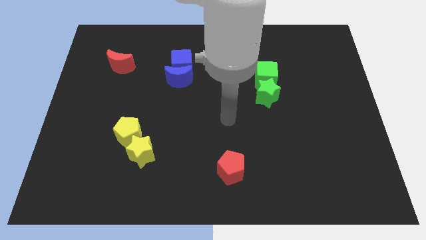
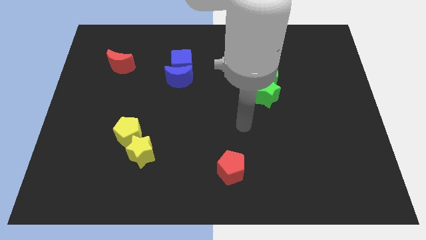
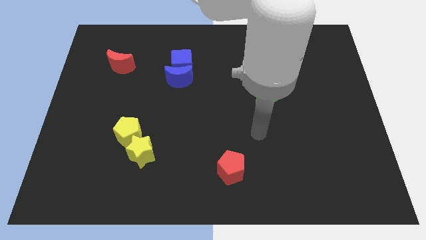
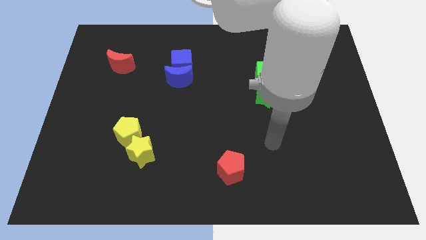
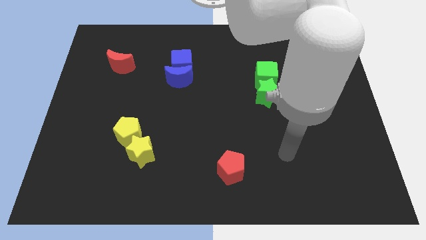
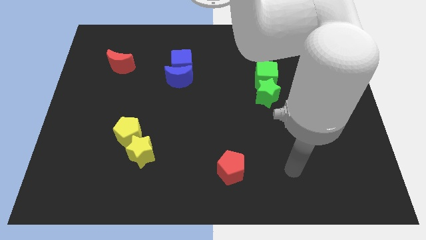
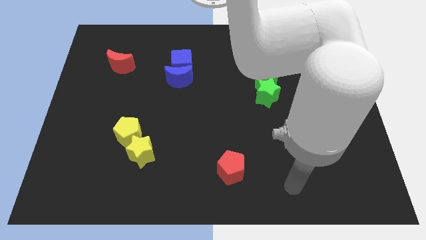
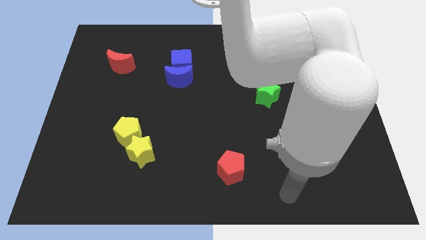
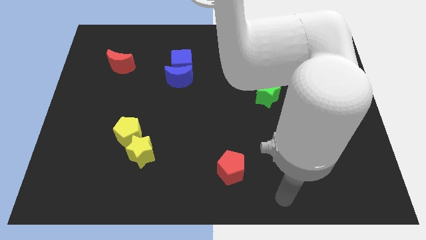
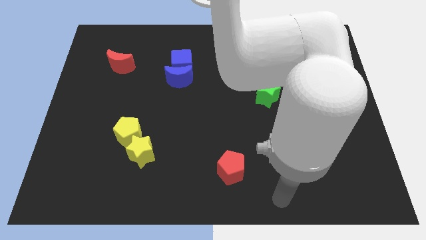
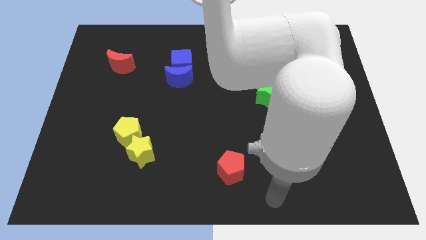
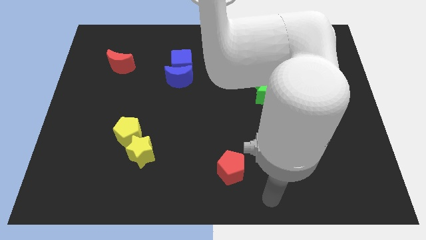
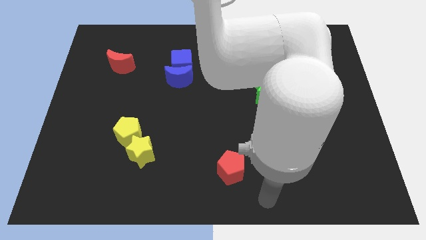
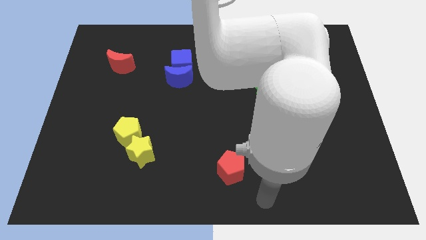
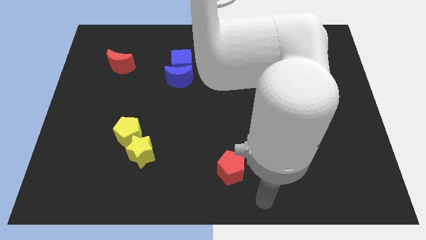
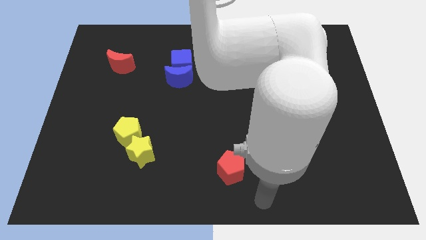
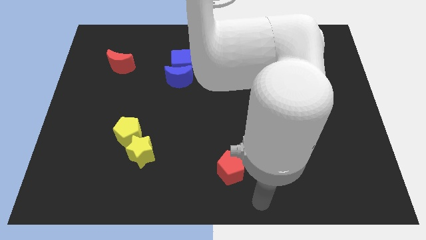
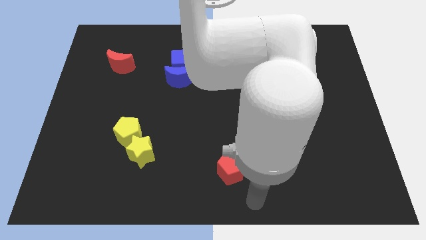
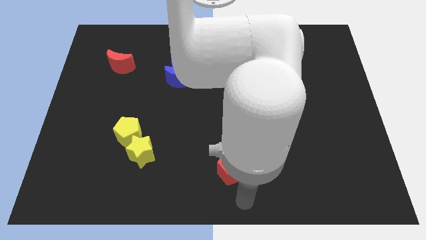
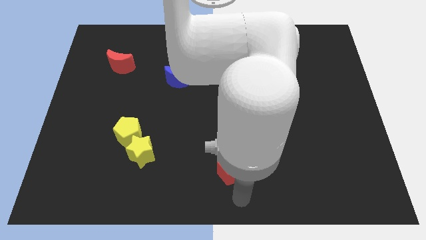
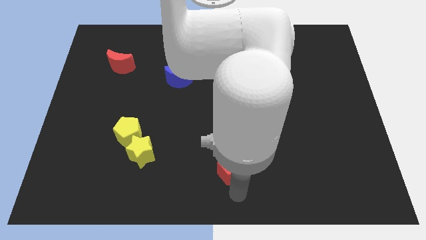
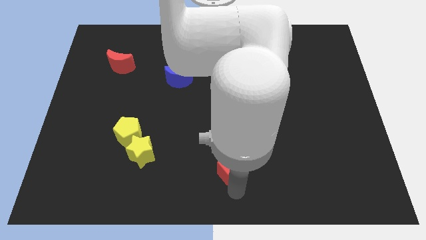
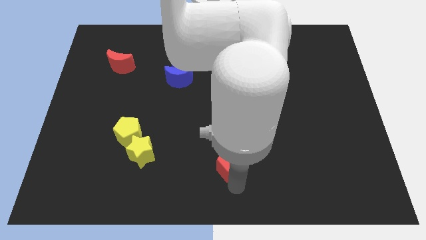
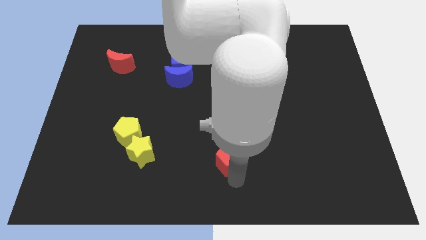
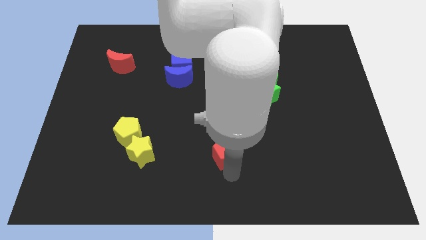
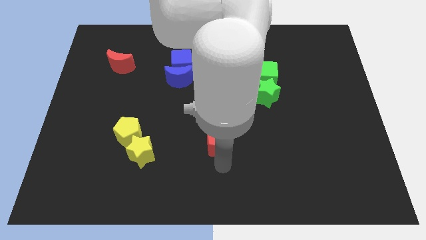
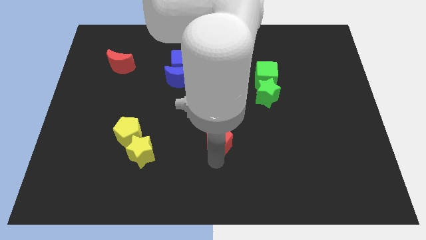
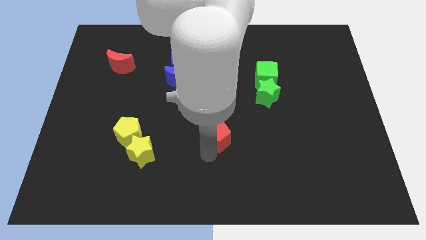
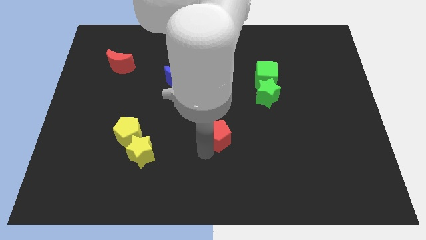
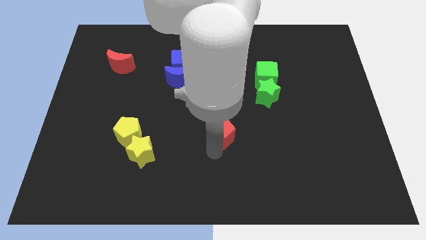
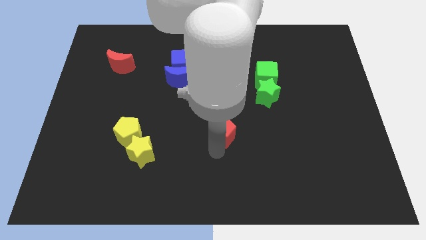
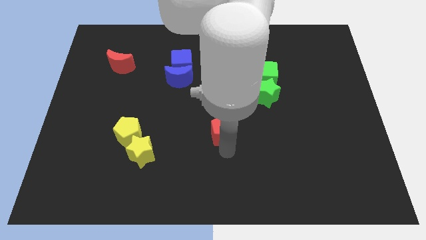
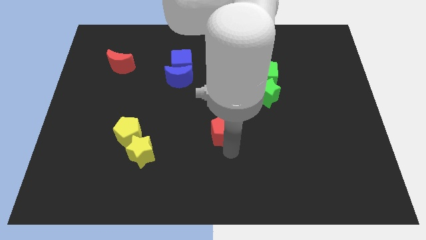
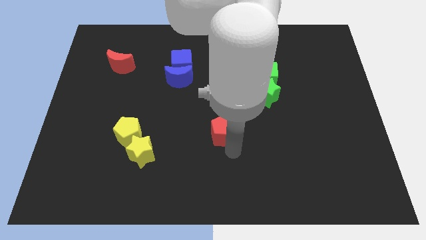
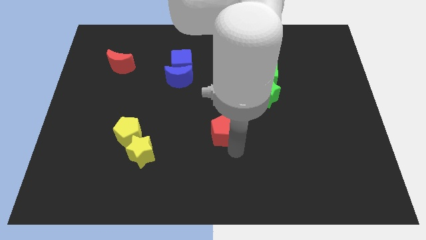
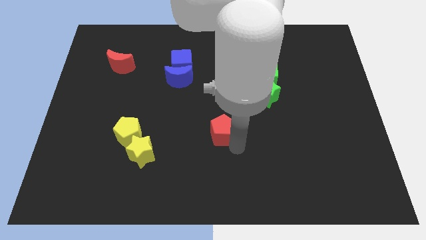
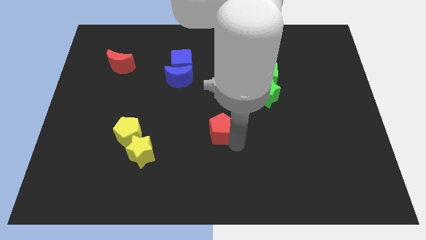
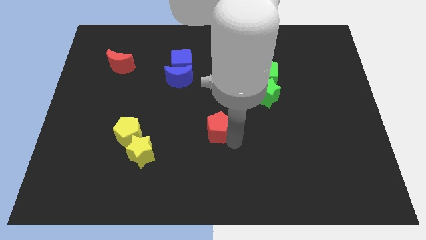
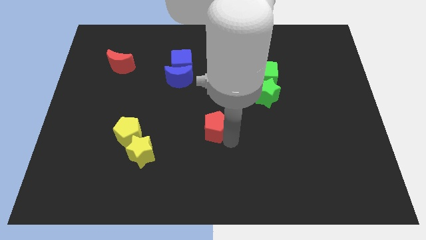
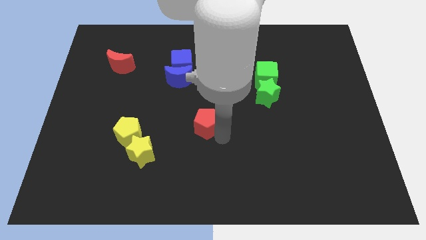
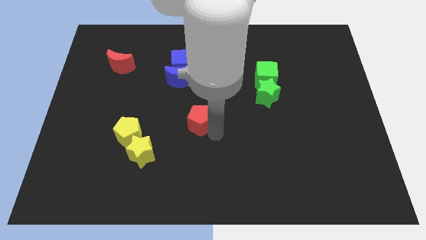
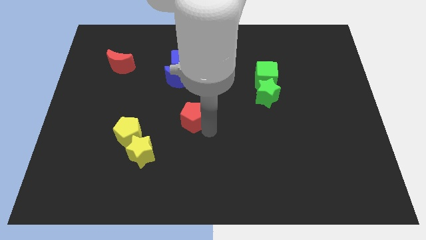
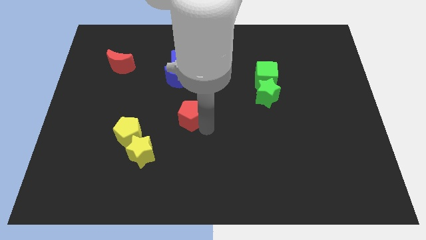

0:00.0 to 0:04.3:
move the red pentagon at the center

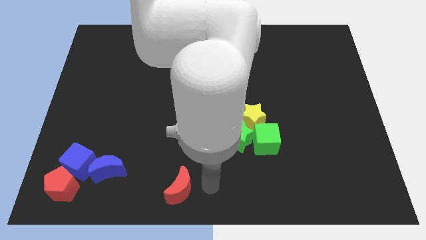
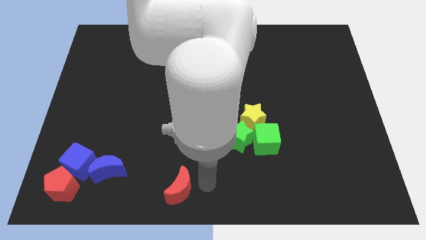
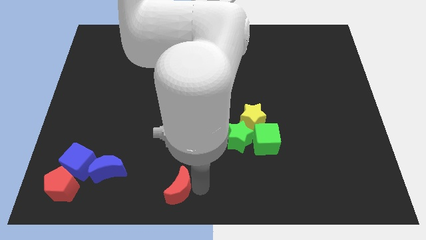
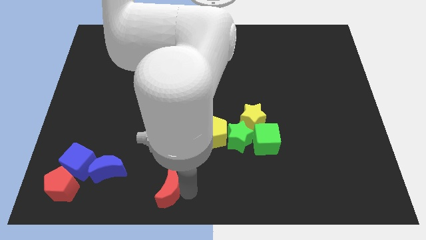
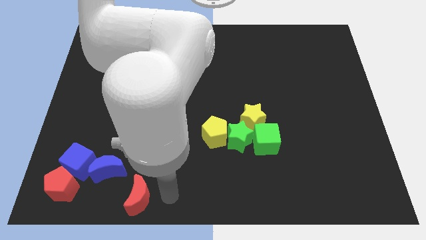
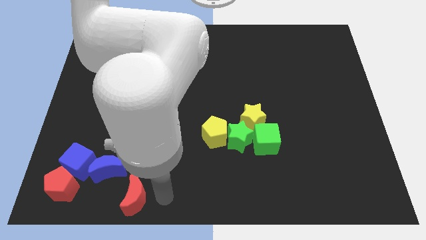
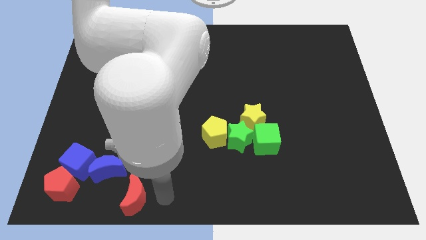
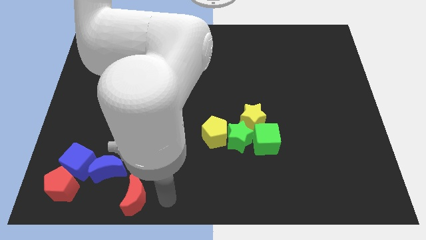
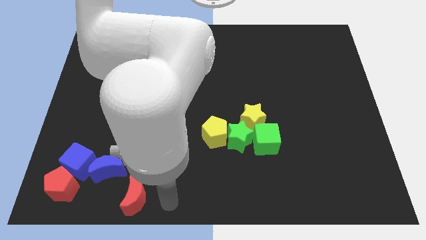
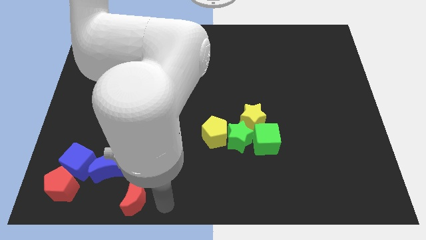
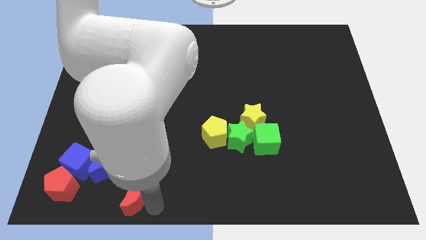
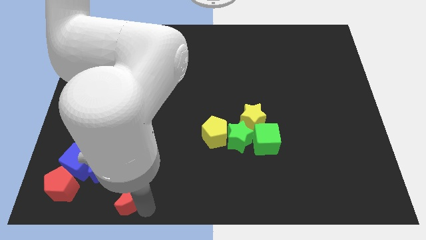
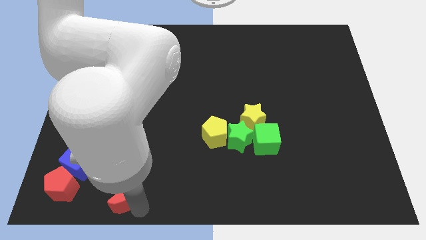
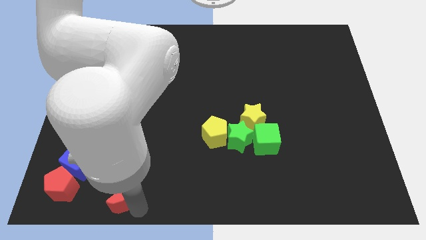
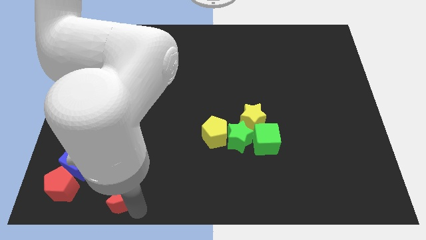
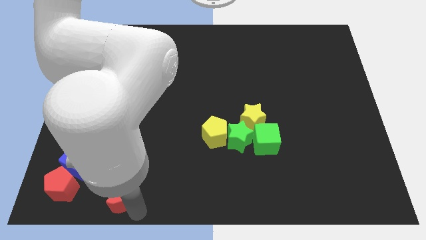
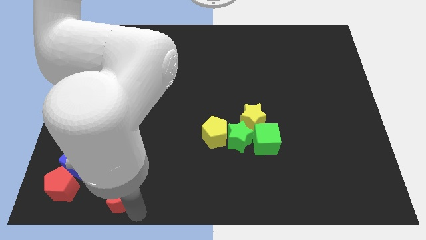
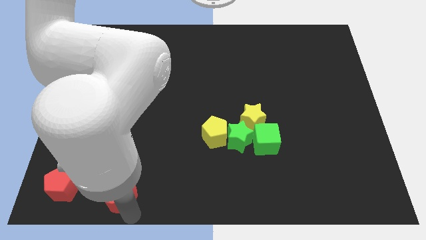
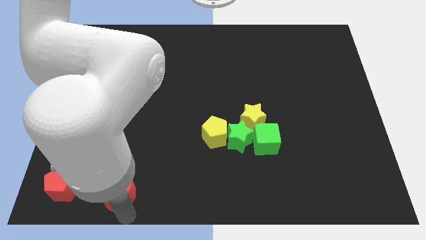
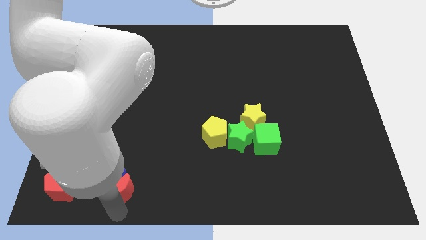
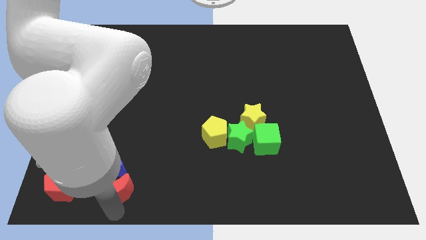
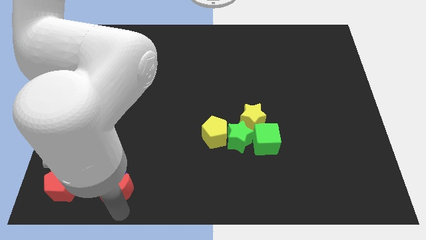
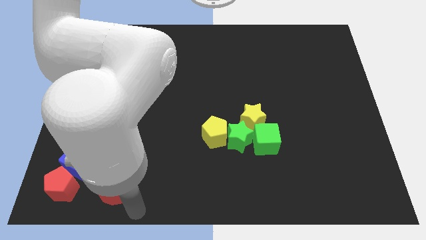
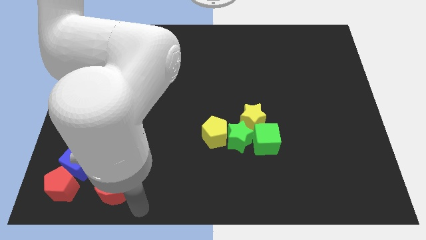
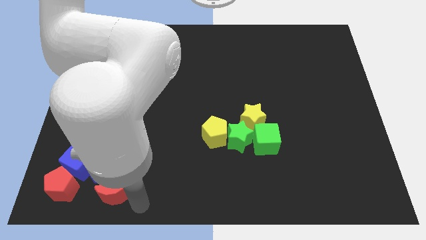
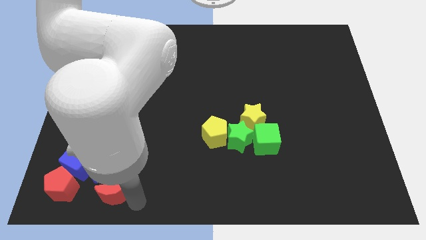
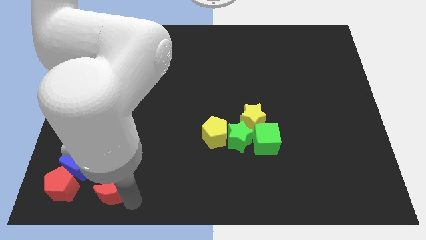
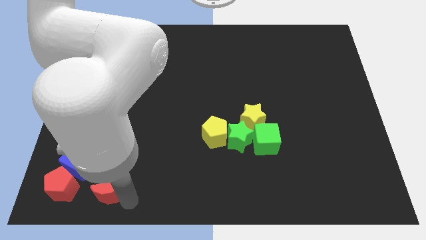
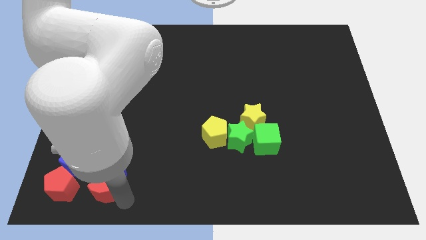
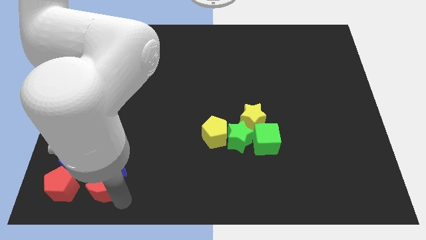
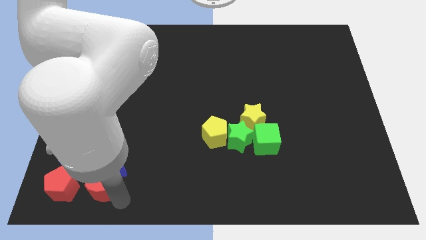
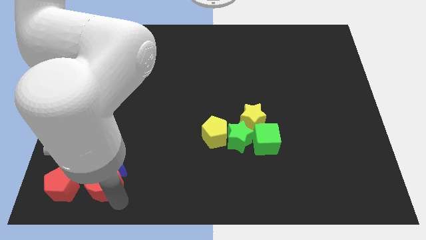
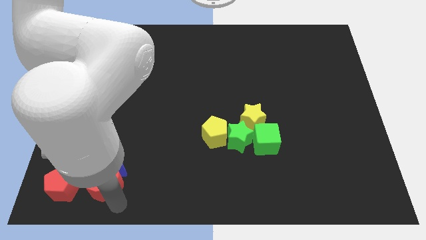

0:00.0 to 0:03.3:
push red crescent to the bottom of the blue crescent

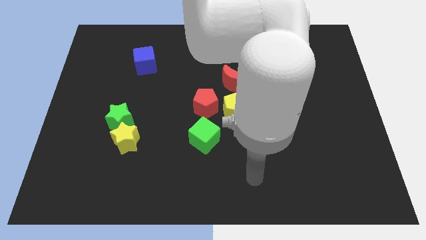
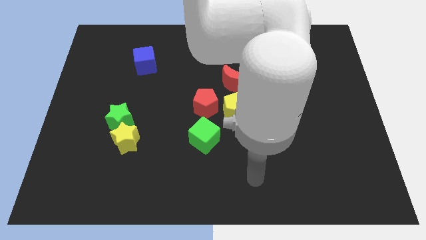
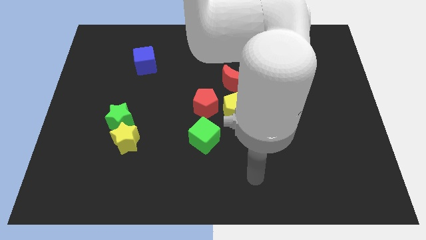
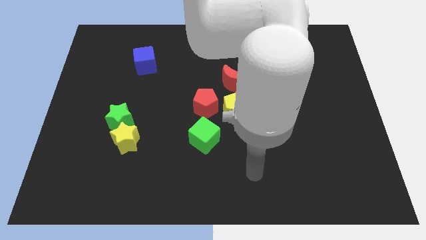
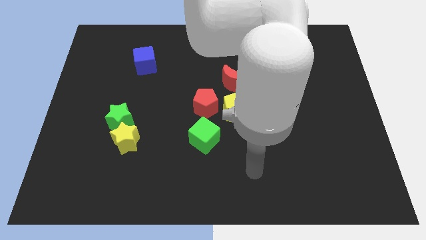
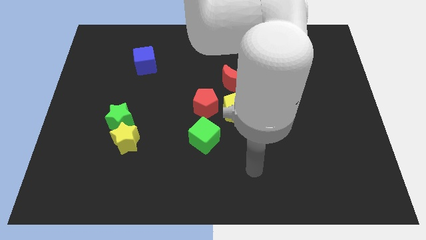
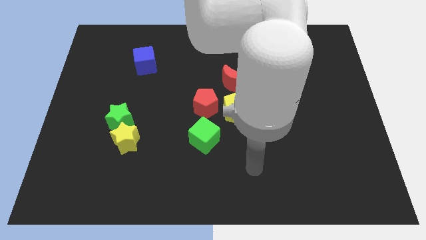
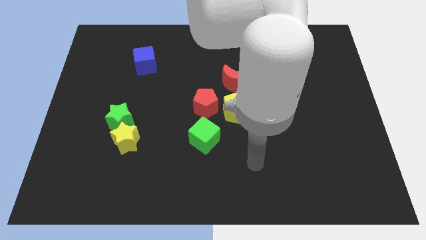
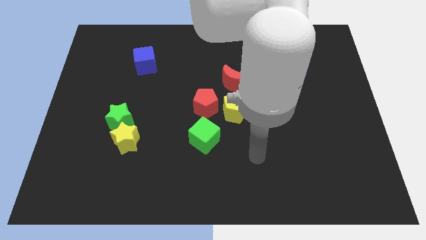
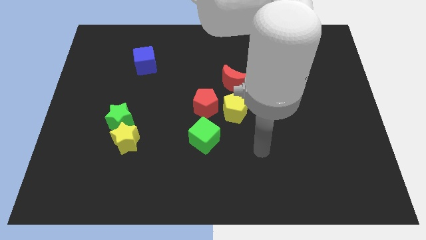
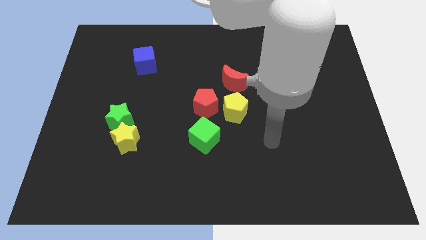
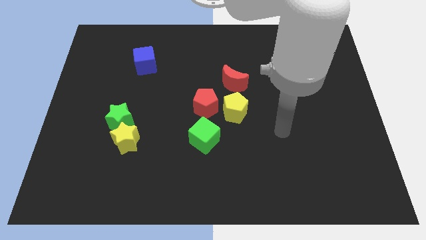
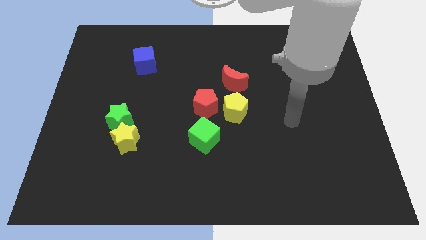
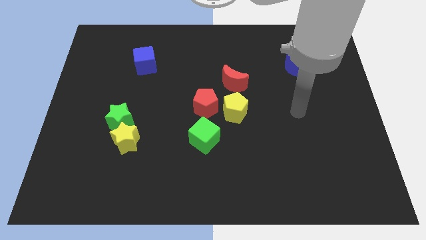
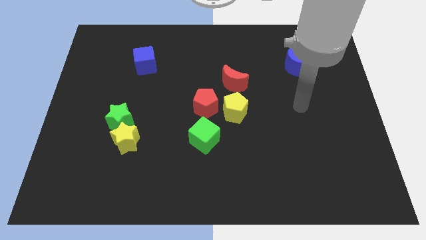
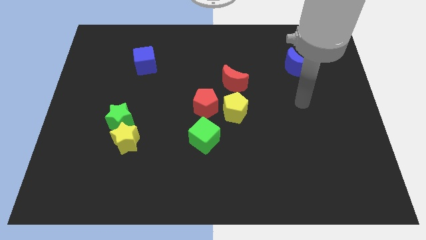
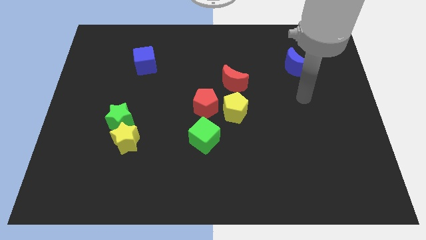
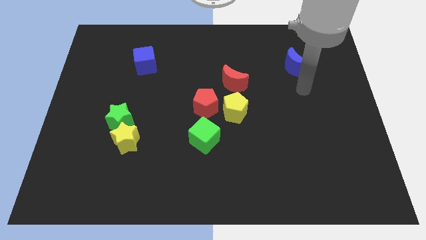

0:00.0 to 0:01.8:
move your arm towards the top side of the board
